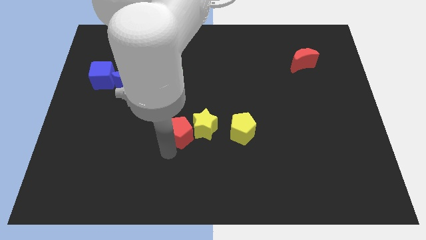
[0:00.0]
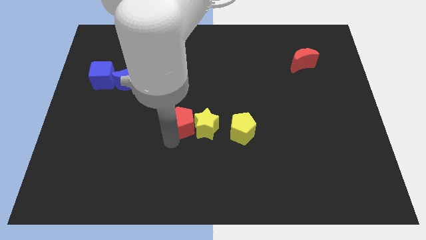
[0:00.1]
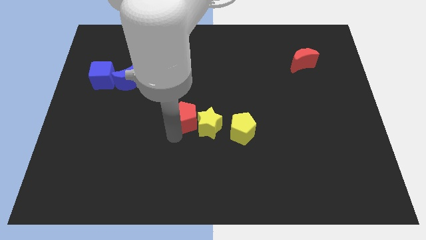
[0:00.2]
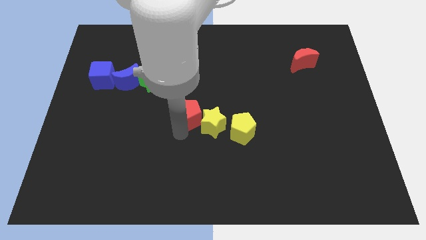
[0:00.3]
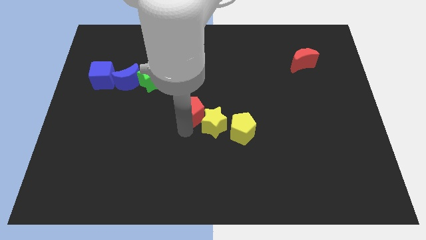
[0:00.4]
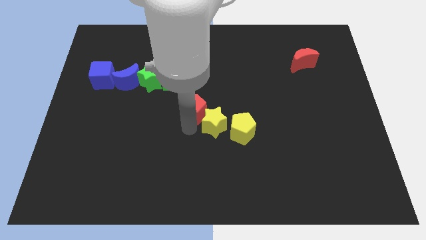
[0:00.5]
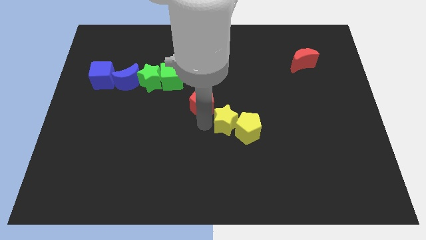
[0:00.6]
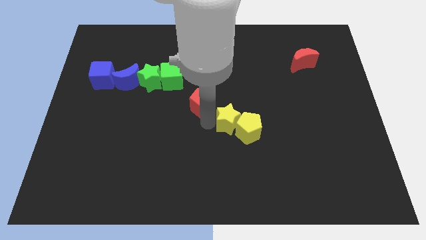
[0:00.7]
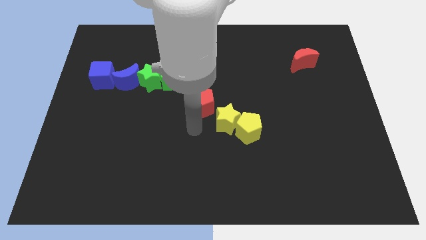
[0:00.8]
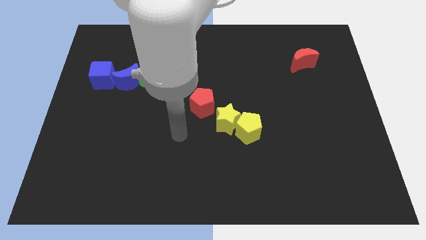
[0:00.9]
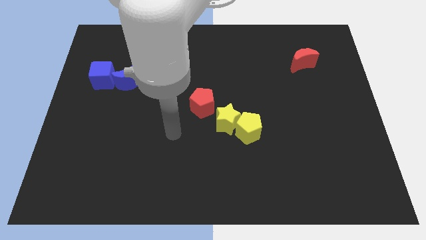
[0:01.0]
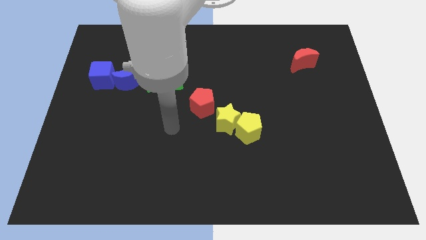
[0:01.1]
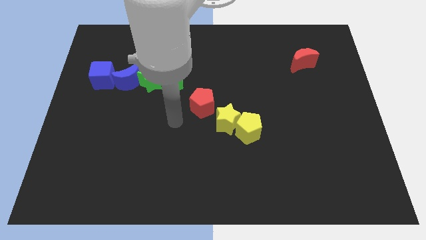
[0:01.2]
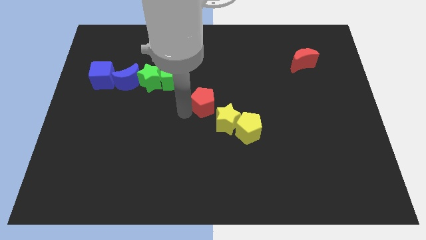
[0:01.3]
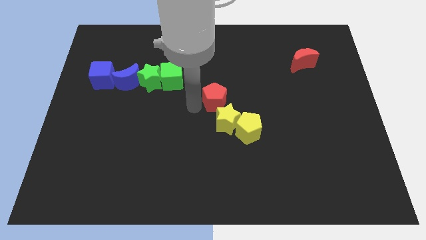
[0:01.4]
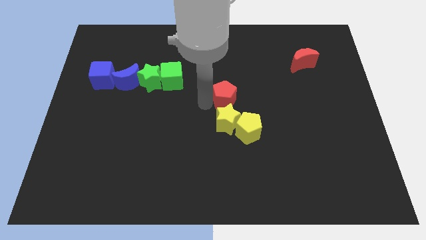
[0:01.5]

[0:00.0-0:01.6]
place the red pentagon above the yellow star

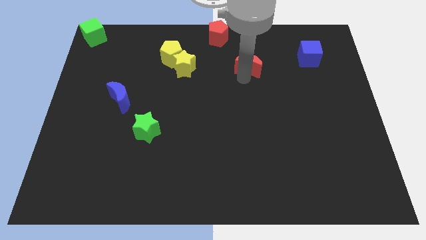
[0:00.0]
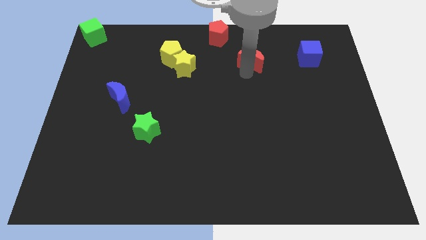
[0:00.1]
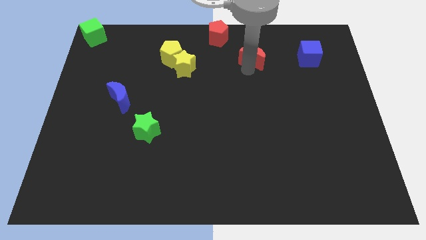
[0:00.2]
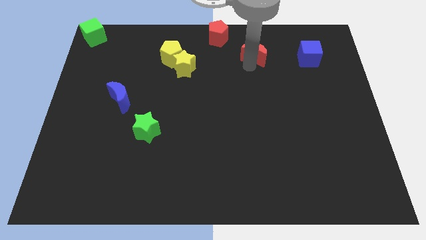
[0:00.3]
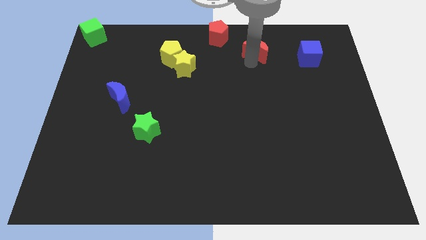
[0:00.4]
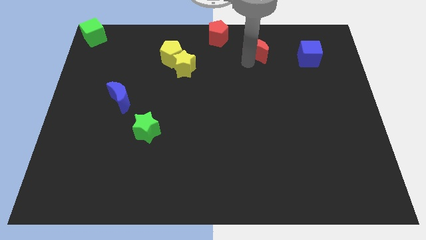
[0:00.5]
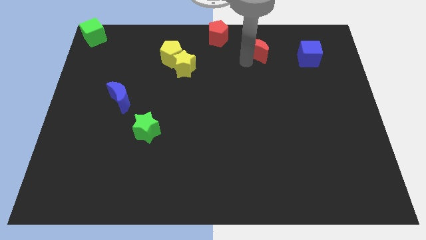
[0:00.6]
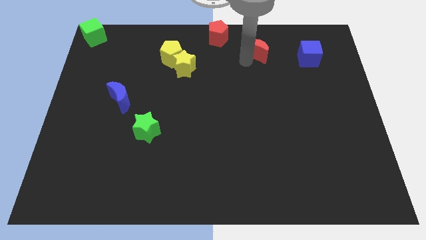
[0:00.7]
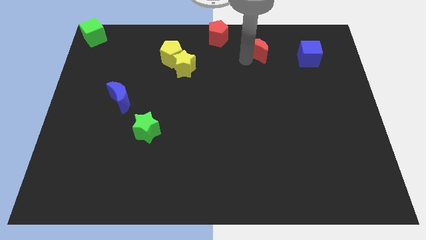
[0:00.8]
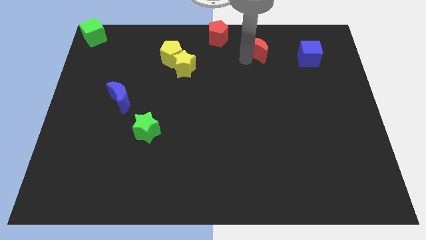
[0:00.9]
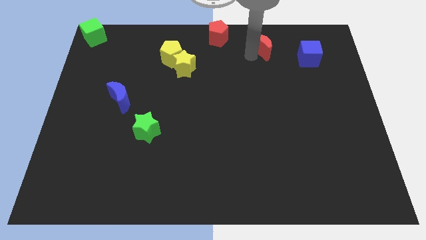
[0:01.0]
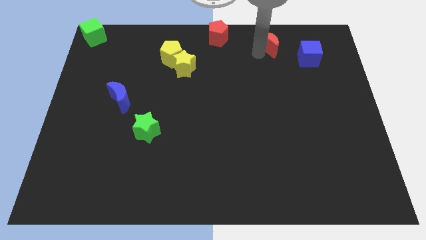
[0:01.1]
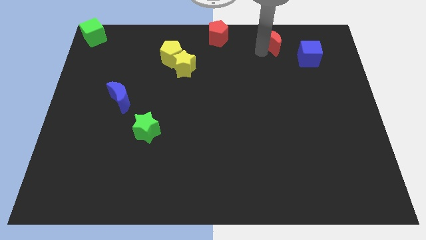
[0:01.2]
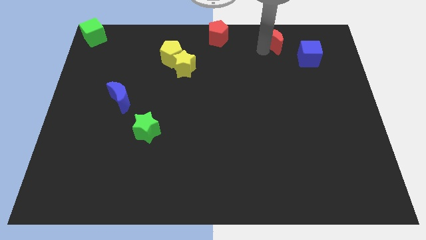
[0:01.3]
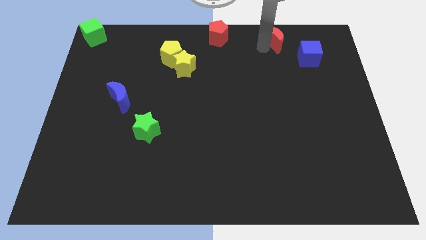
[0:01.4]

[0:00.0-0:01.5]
place the red moon diagonally to blue cube

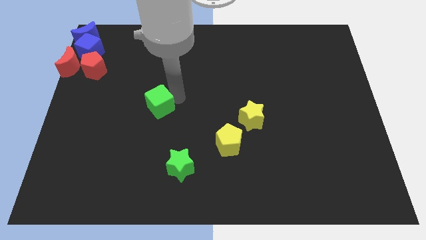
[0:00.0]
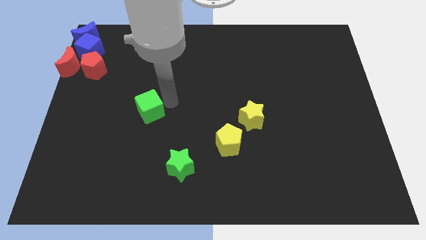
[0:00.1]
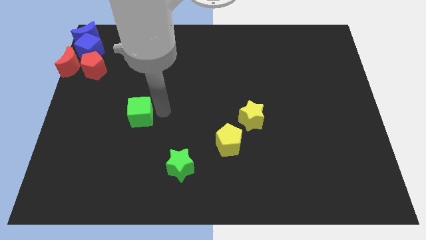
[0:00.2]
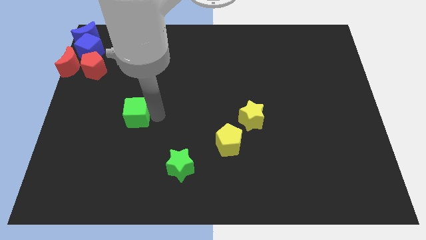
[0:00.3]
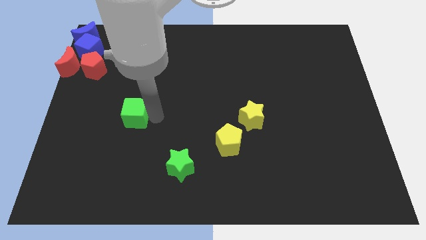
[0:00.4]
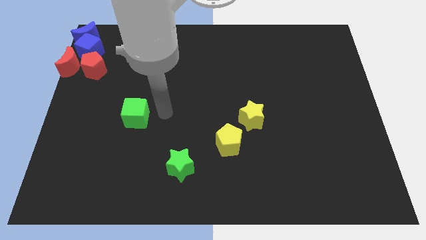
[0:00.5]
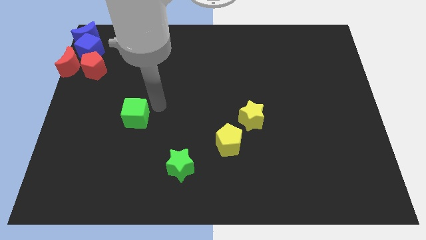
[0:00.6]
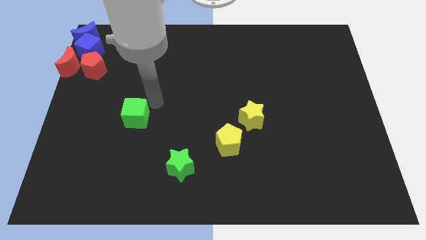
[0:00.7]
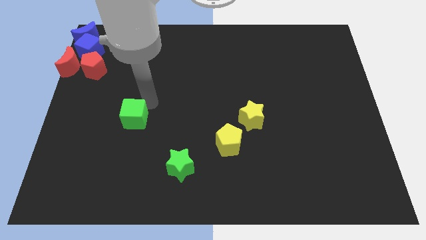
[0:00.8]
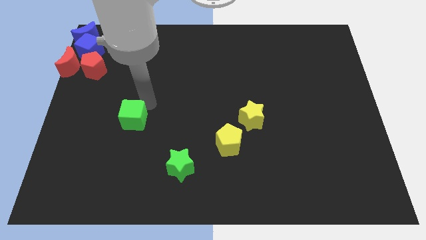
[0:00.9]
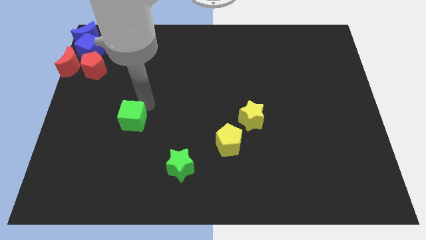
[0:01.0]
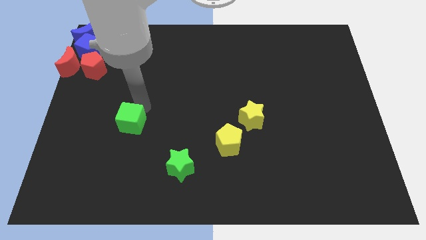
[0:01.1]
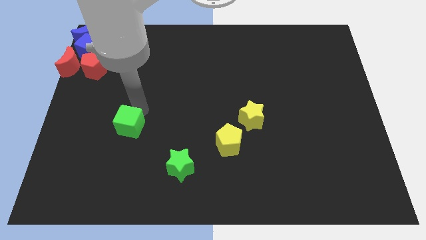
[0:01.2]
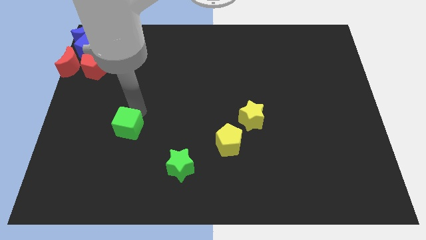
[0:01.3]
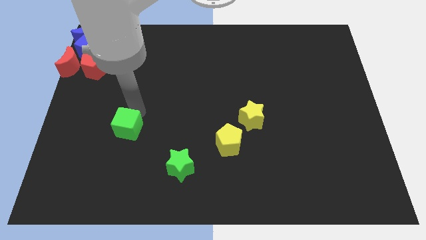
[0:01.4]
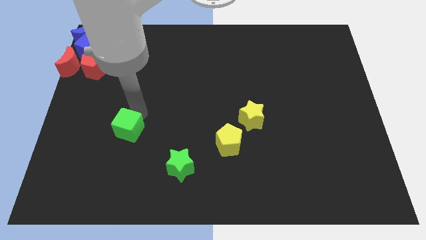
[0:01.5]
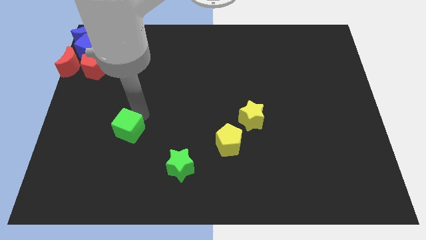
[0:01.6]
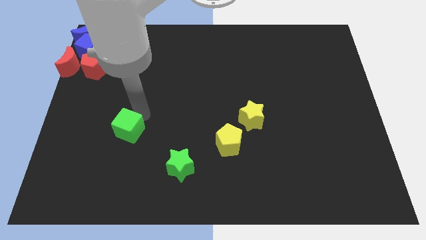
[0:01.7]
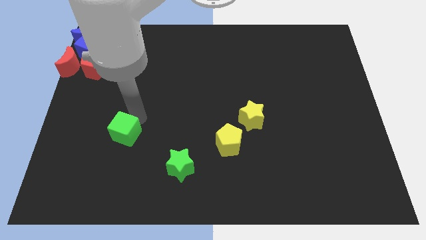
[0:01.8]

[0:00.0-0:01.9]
push the green cube towards the bottom side of the board

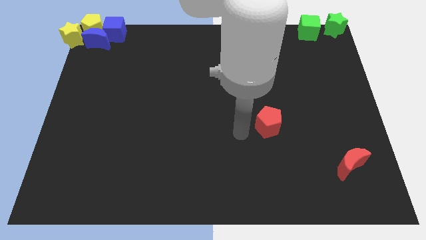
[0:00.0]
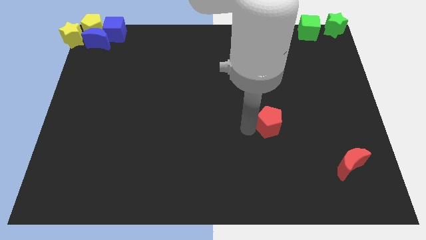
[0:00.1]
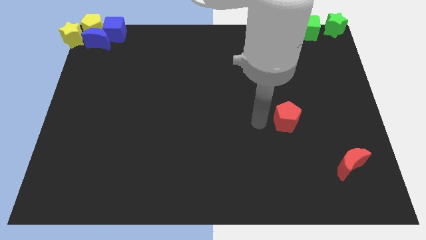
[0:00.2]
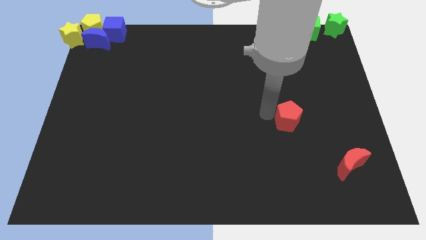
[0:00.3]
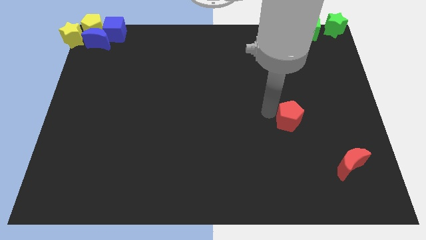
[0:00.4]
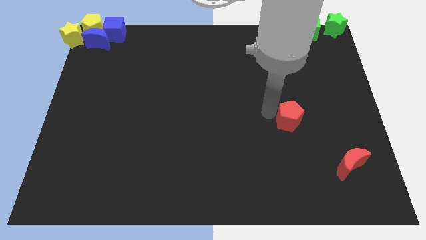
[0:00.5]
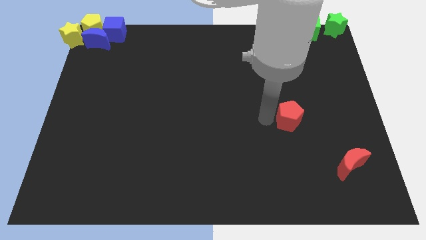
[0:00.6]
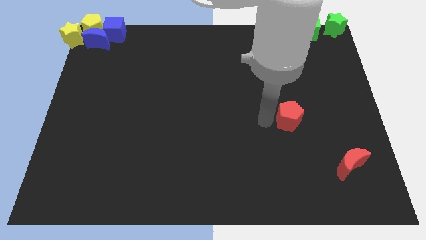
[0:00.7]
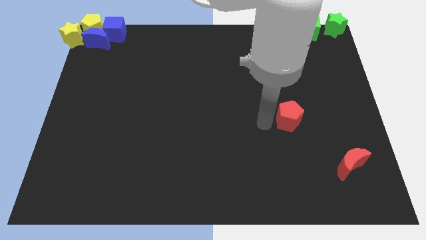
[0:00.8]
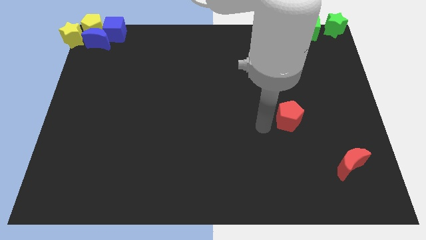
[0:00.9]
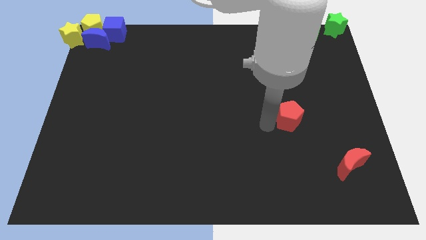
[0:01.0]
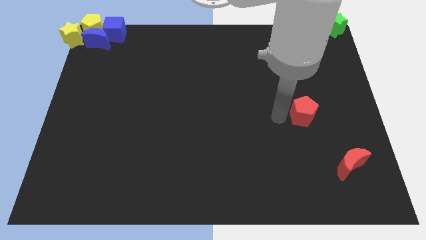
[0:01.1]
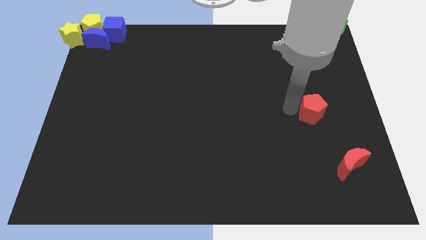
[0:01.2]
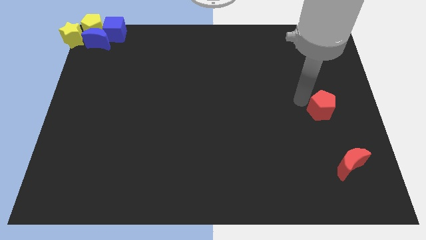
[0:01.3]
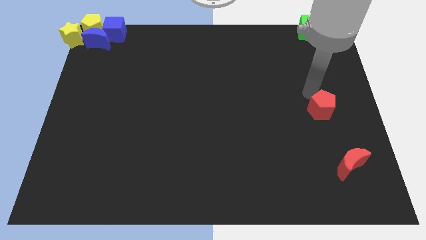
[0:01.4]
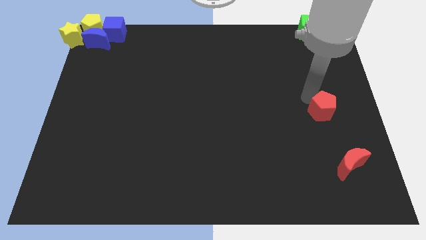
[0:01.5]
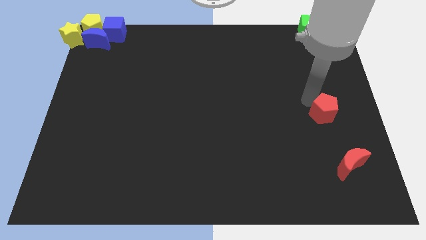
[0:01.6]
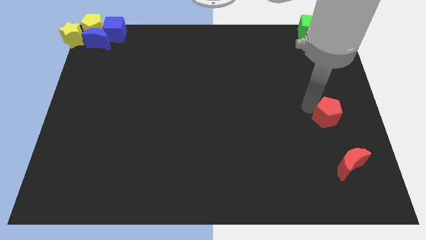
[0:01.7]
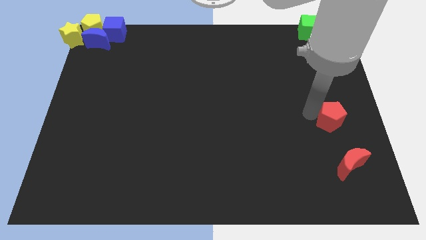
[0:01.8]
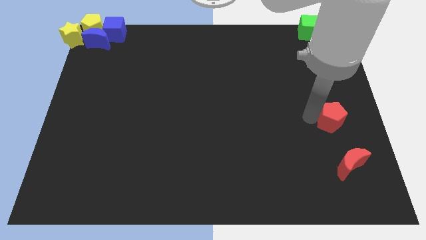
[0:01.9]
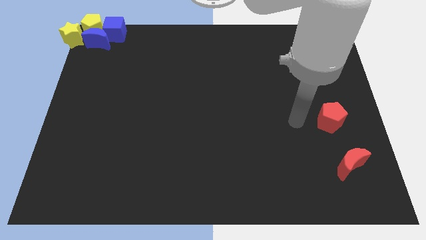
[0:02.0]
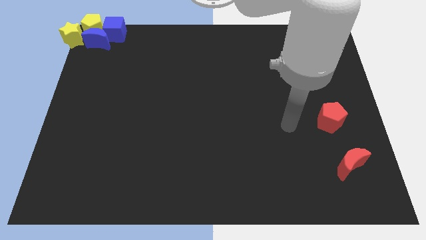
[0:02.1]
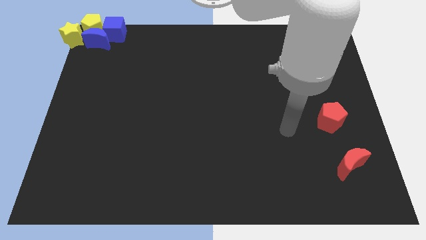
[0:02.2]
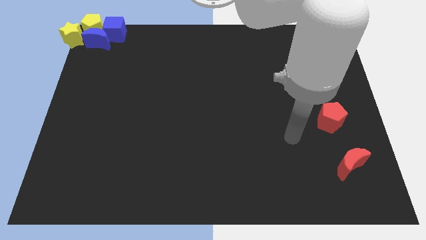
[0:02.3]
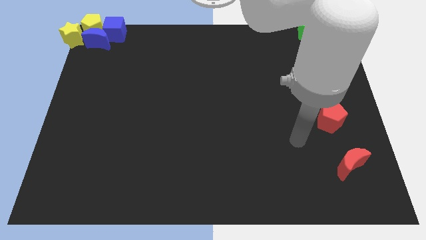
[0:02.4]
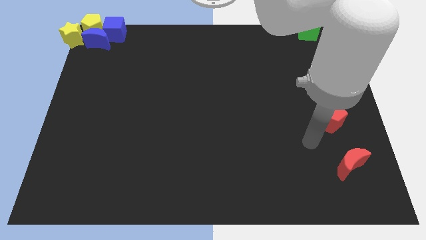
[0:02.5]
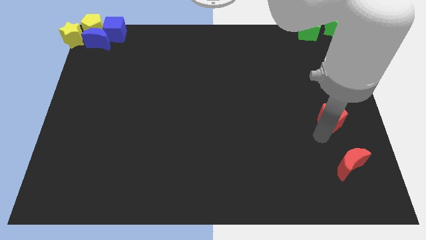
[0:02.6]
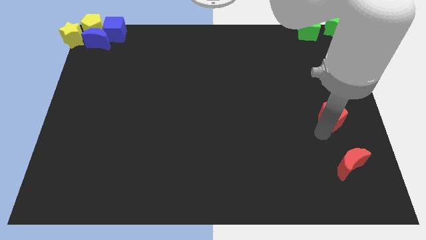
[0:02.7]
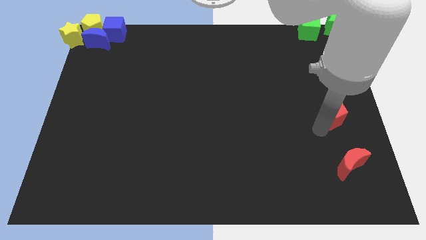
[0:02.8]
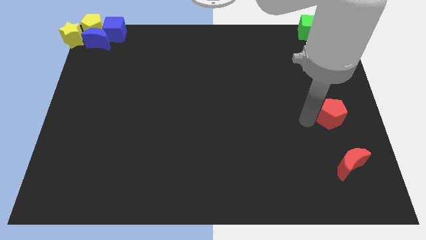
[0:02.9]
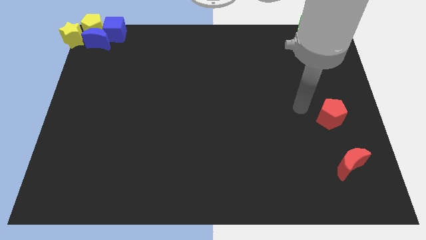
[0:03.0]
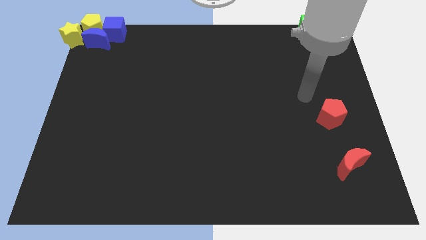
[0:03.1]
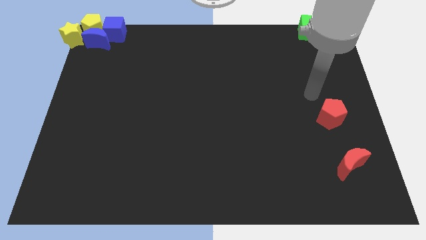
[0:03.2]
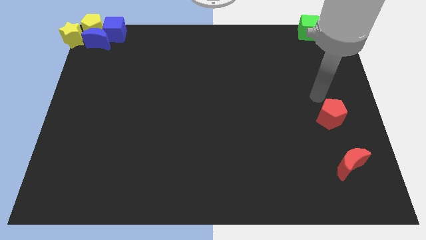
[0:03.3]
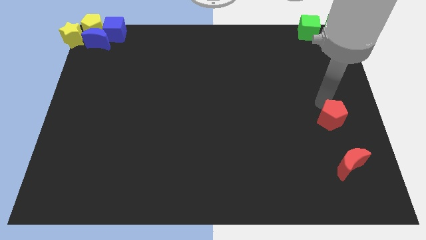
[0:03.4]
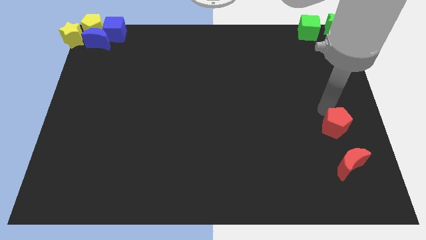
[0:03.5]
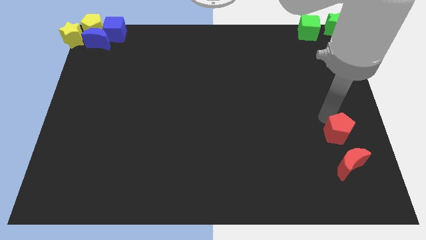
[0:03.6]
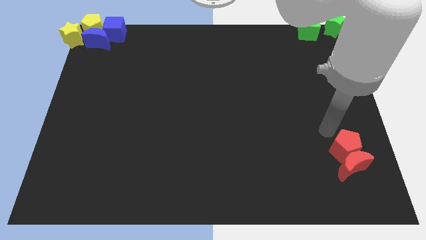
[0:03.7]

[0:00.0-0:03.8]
place the red pentagon into the red crescent
